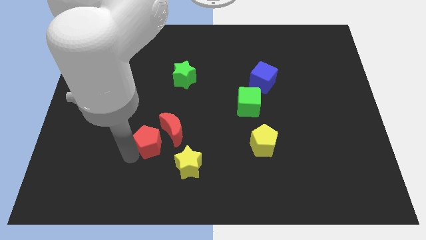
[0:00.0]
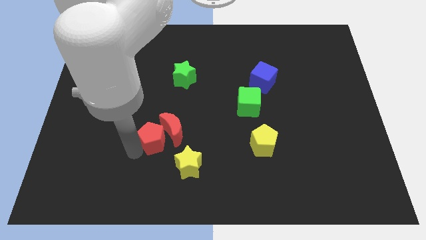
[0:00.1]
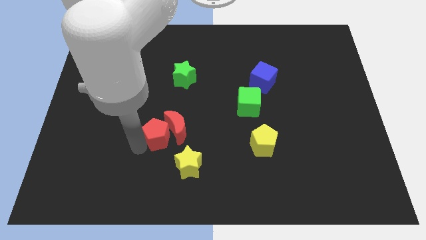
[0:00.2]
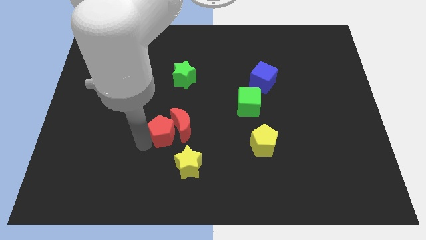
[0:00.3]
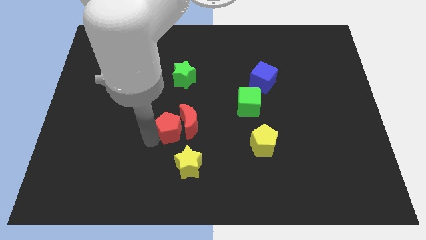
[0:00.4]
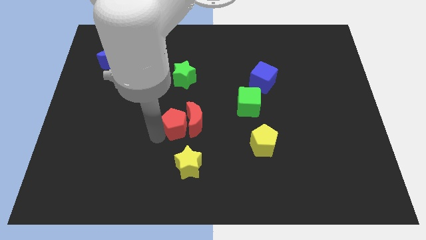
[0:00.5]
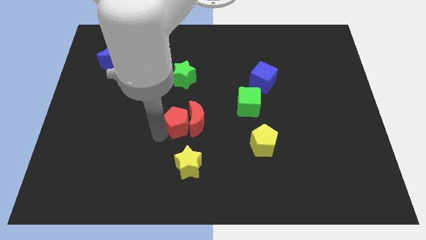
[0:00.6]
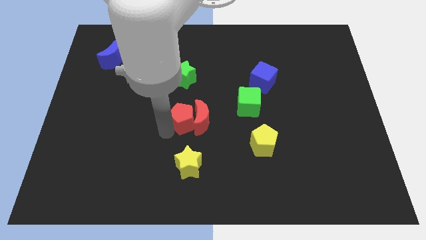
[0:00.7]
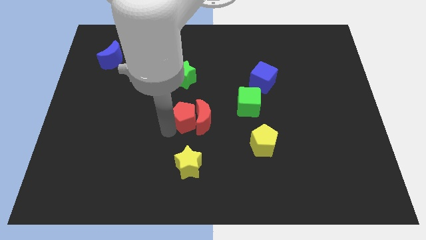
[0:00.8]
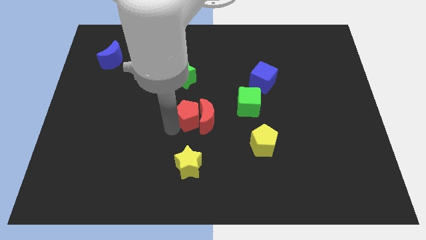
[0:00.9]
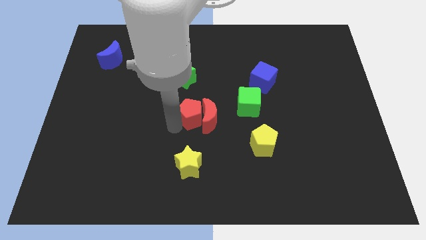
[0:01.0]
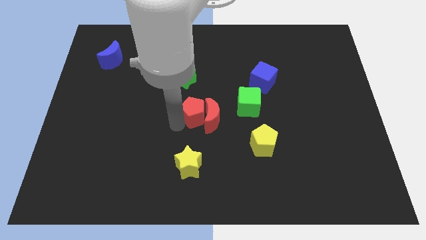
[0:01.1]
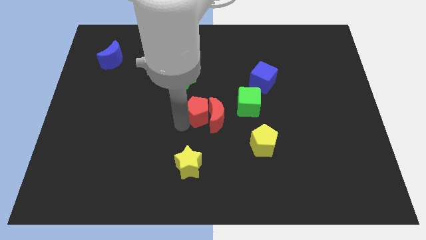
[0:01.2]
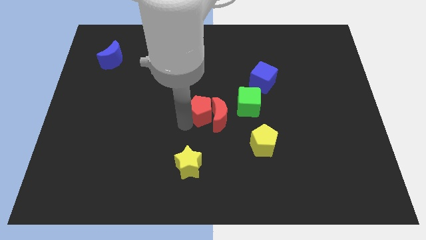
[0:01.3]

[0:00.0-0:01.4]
move the red pentagon along with red crescent to the center

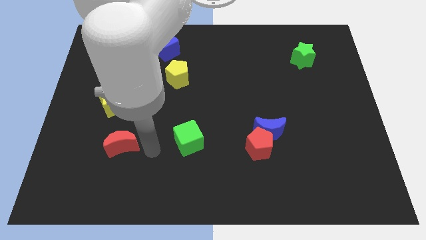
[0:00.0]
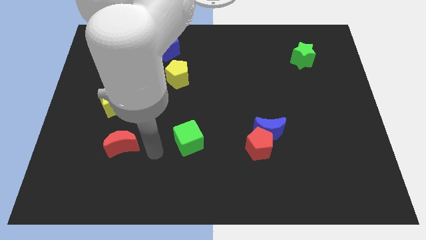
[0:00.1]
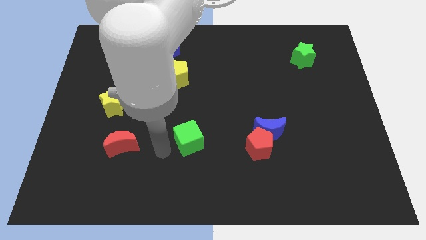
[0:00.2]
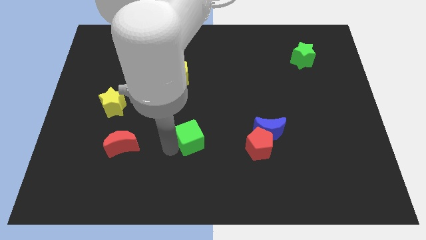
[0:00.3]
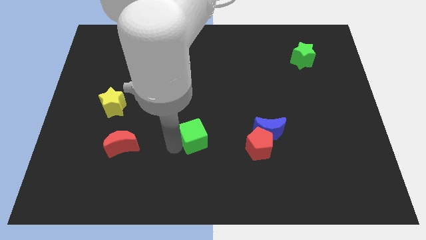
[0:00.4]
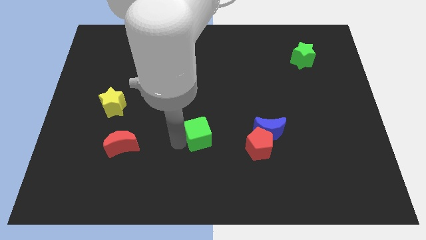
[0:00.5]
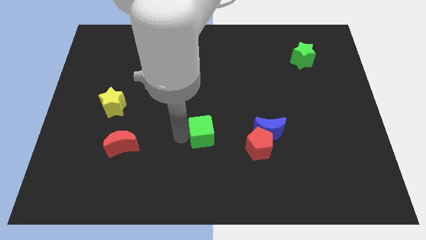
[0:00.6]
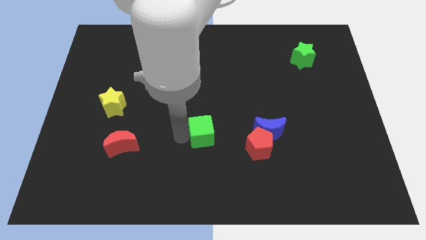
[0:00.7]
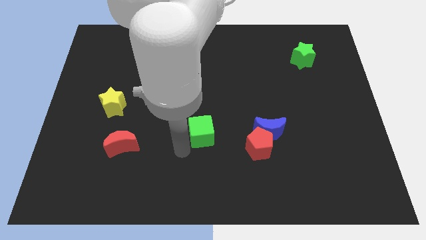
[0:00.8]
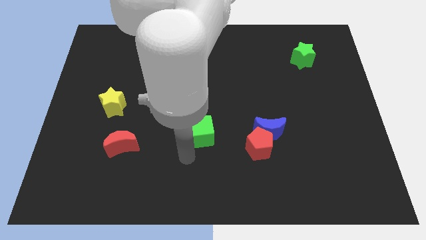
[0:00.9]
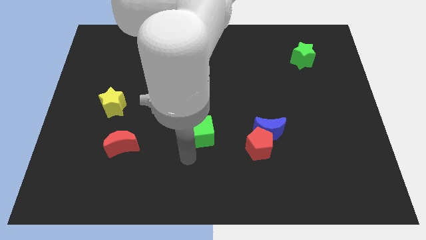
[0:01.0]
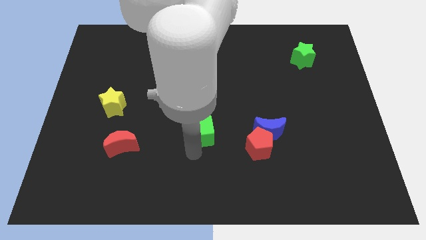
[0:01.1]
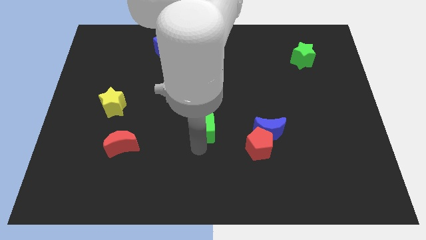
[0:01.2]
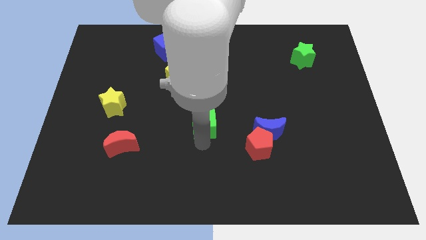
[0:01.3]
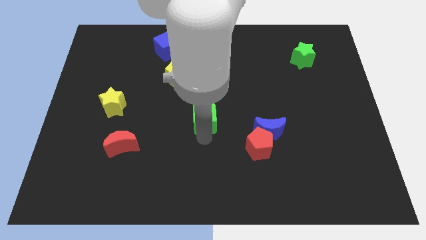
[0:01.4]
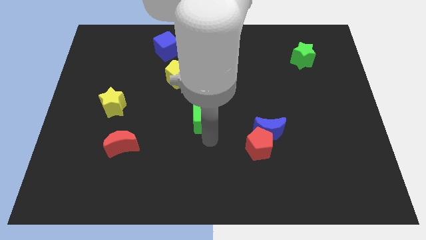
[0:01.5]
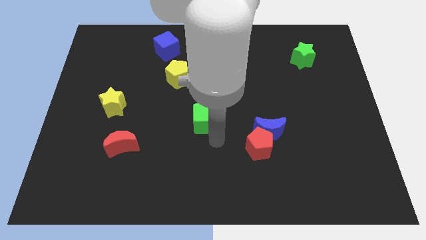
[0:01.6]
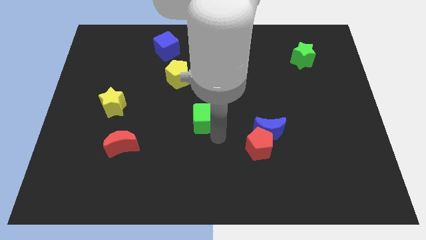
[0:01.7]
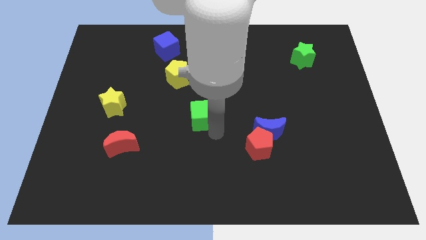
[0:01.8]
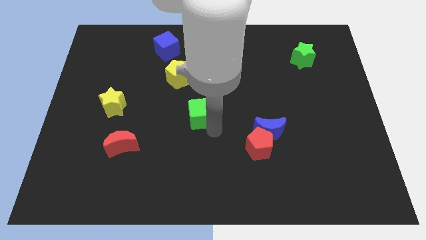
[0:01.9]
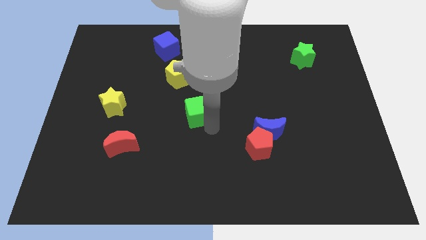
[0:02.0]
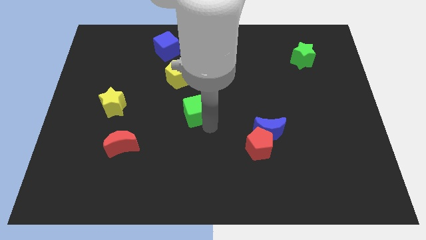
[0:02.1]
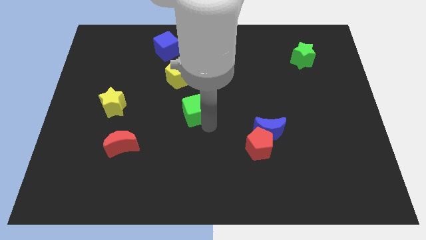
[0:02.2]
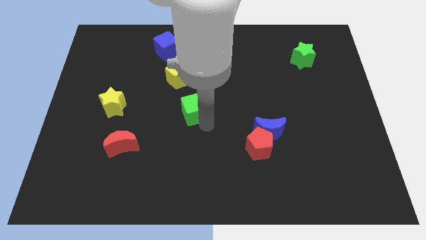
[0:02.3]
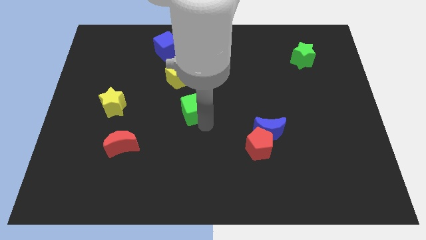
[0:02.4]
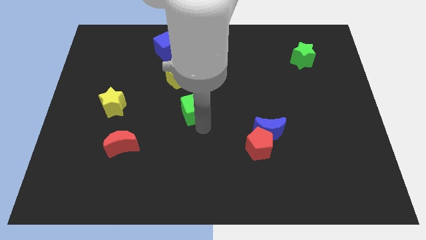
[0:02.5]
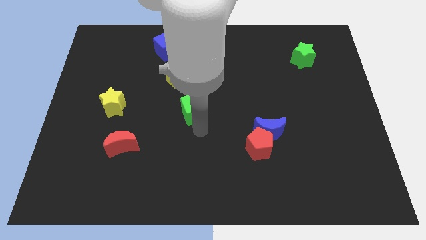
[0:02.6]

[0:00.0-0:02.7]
put the green cube at the bottom of yellow pentagon

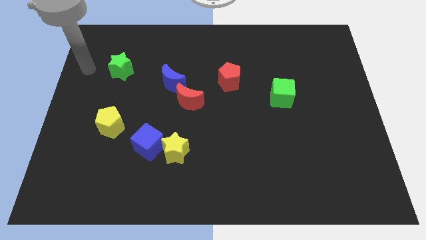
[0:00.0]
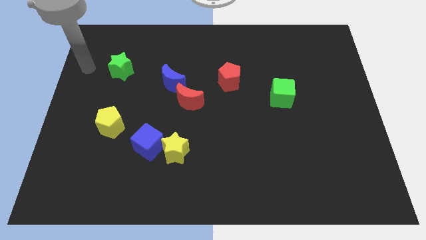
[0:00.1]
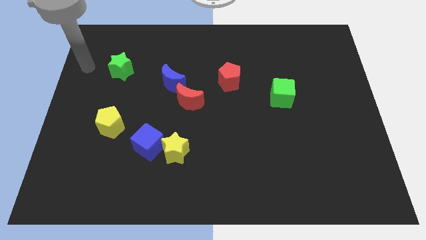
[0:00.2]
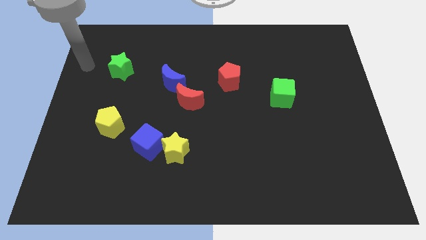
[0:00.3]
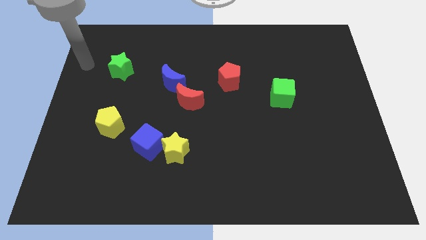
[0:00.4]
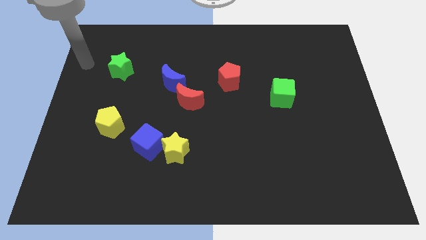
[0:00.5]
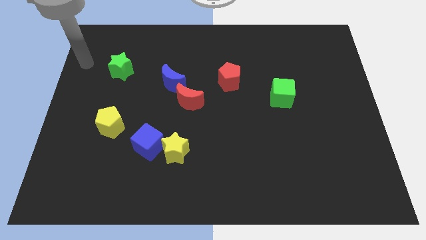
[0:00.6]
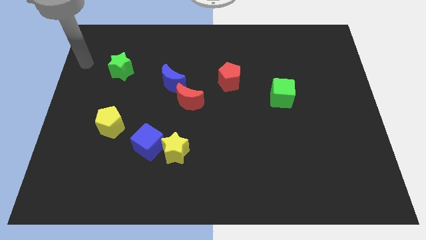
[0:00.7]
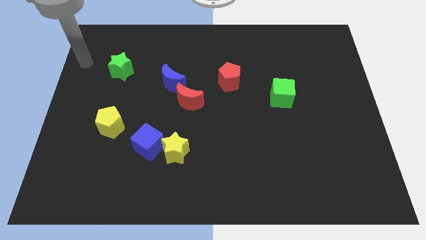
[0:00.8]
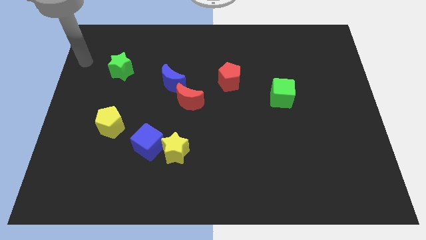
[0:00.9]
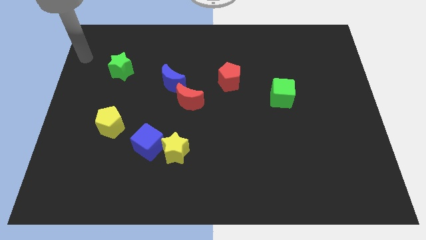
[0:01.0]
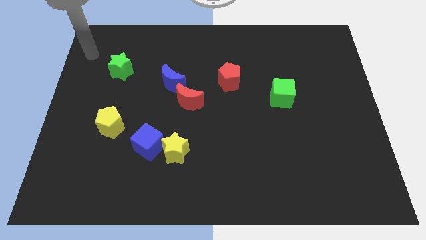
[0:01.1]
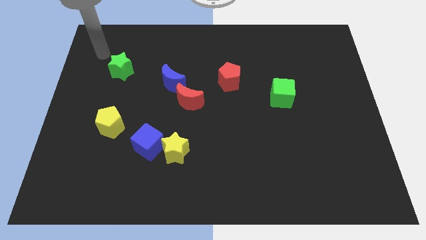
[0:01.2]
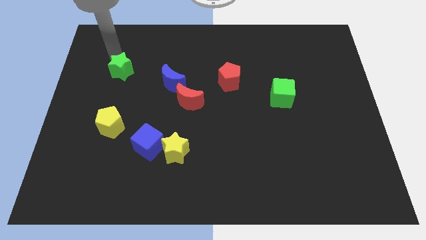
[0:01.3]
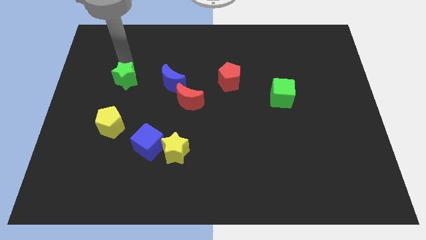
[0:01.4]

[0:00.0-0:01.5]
touch the top of the green star

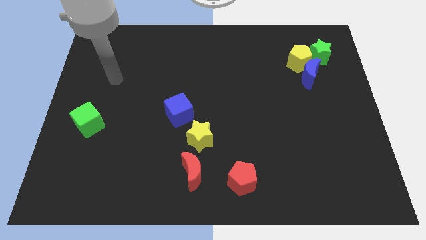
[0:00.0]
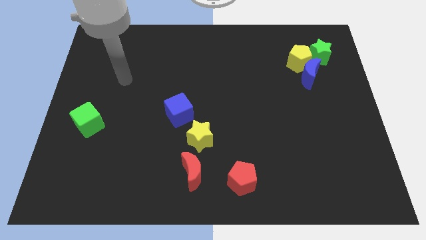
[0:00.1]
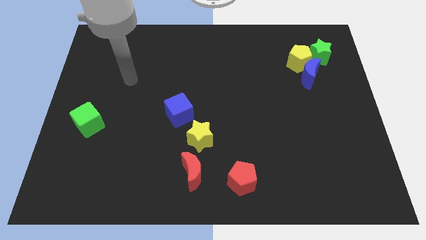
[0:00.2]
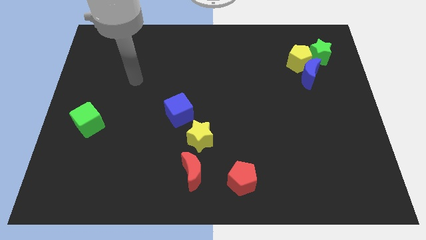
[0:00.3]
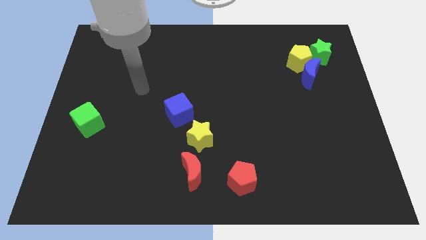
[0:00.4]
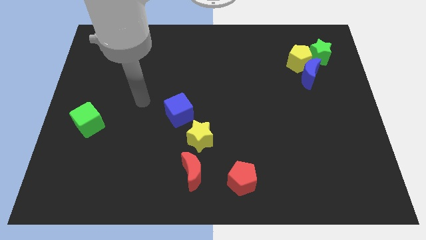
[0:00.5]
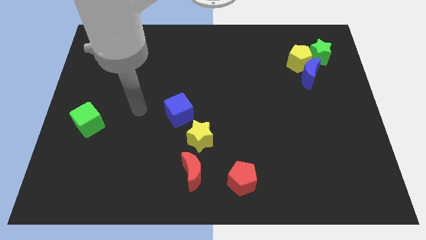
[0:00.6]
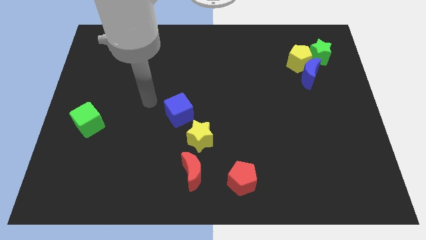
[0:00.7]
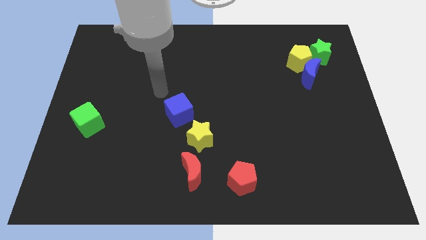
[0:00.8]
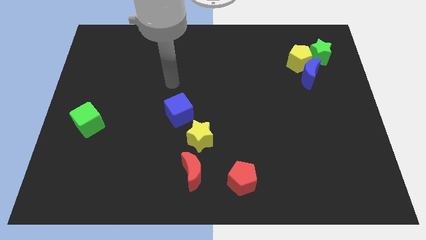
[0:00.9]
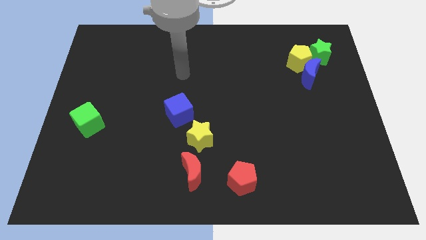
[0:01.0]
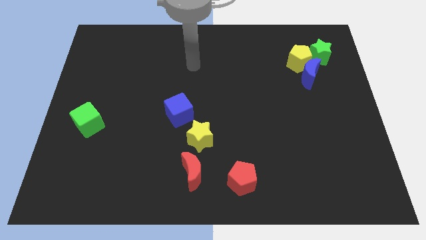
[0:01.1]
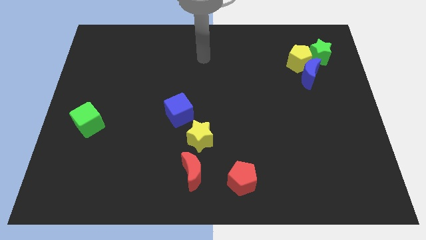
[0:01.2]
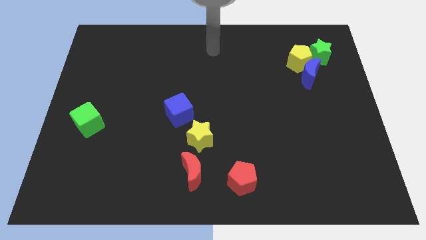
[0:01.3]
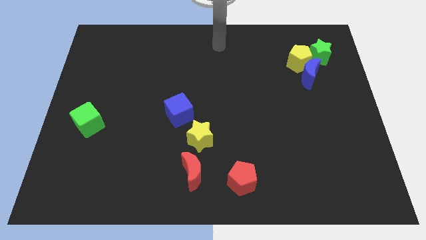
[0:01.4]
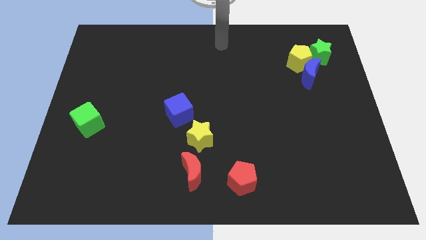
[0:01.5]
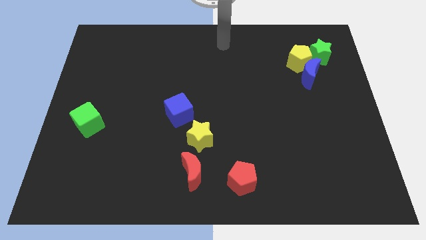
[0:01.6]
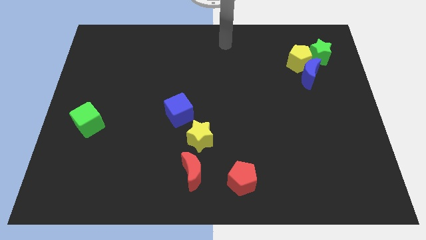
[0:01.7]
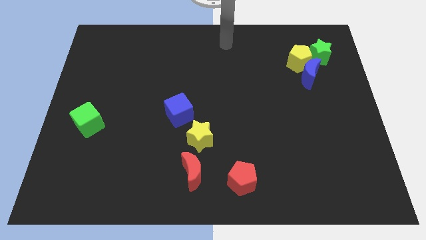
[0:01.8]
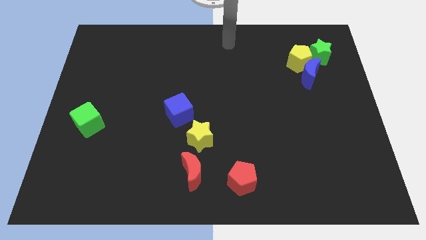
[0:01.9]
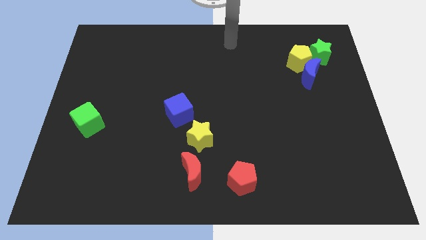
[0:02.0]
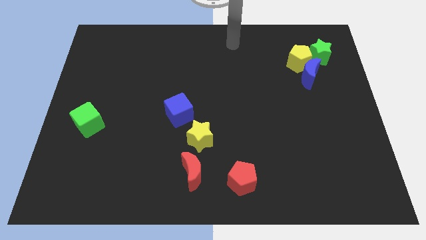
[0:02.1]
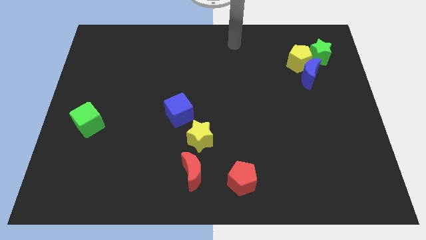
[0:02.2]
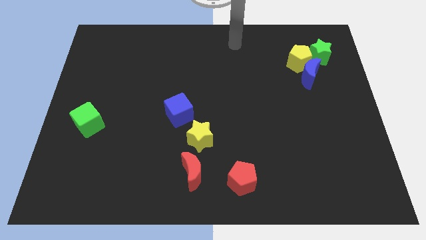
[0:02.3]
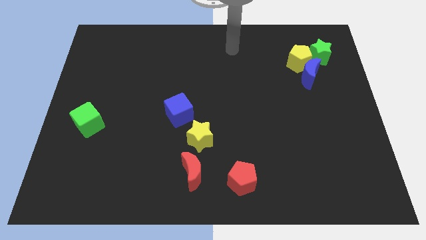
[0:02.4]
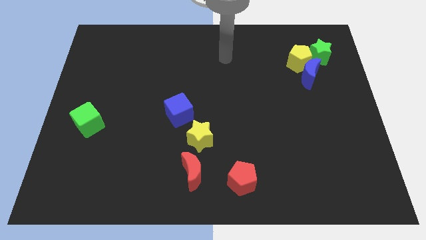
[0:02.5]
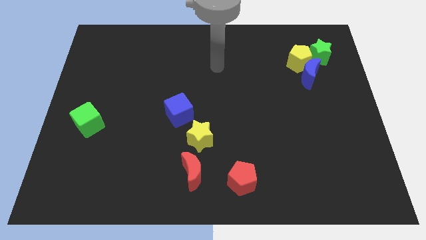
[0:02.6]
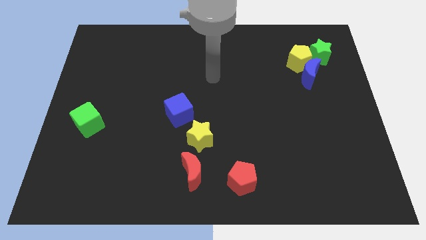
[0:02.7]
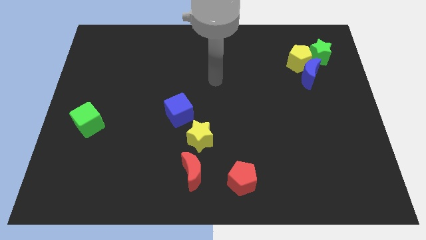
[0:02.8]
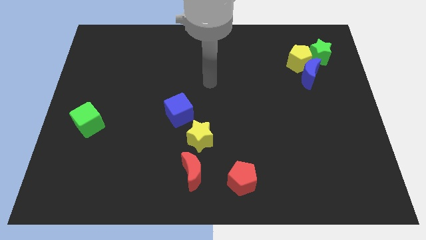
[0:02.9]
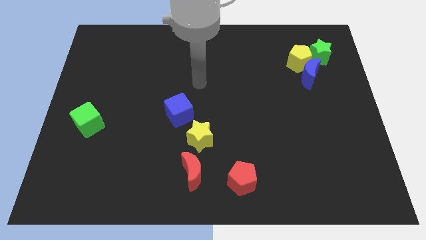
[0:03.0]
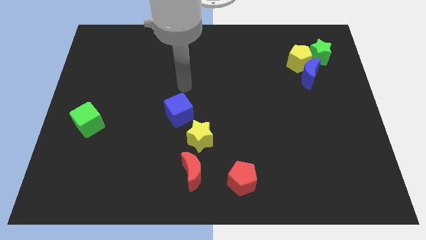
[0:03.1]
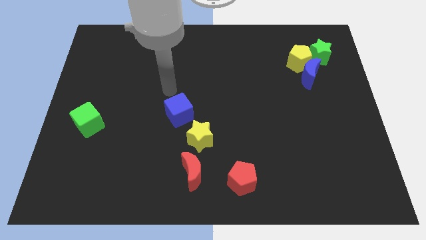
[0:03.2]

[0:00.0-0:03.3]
move your hand at the top side of the blue cube
